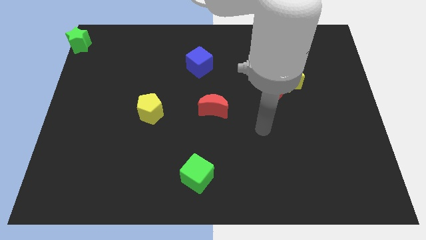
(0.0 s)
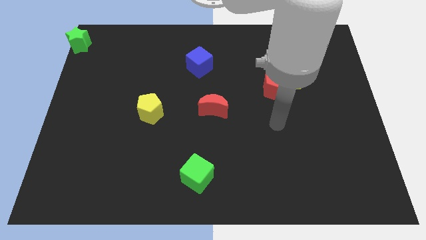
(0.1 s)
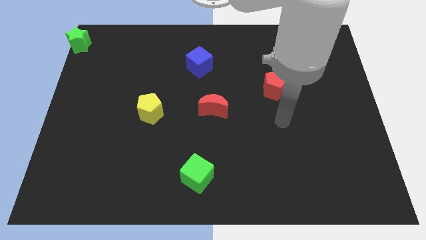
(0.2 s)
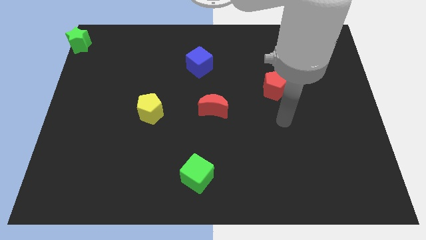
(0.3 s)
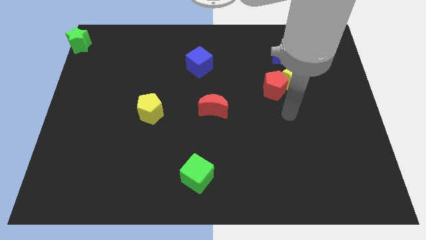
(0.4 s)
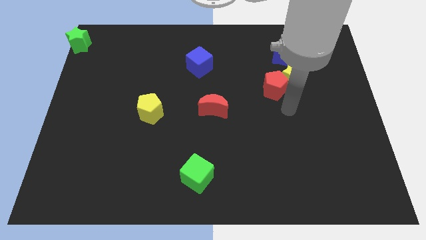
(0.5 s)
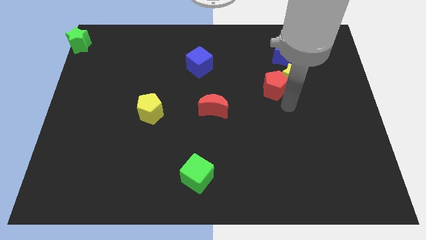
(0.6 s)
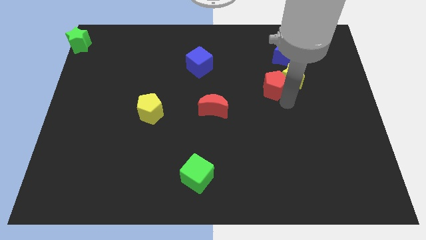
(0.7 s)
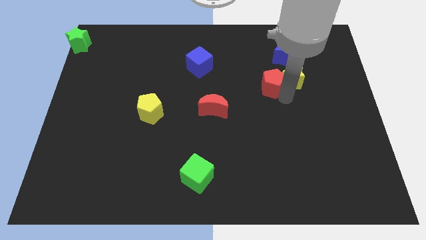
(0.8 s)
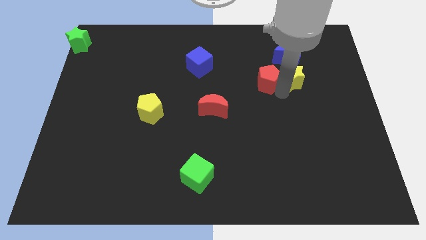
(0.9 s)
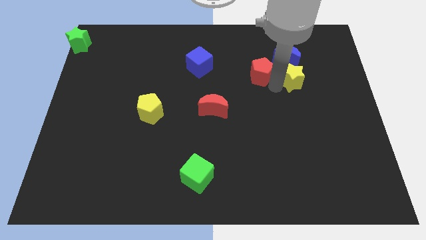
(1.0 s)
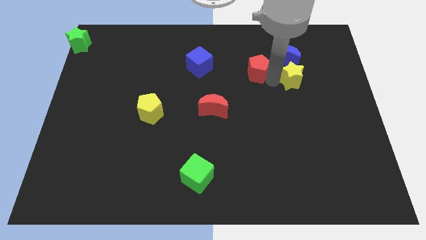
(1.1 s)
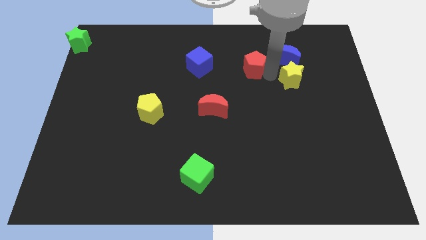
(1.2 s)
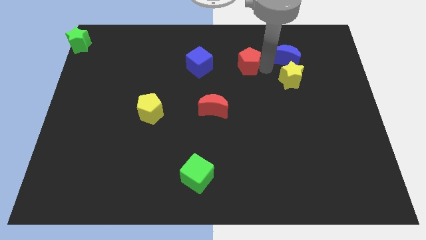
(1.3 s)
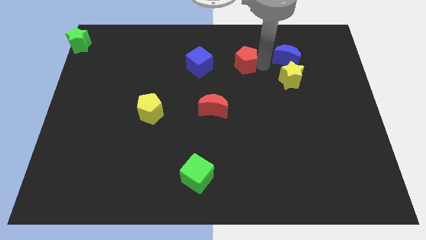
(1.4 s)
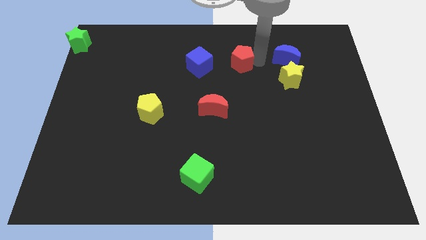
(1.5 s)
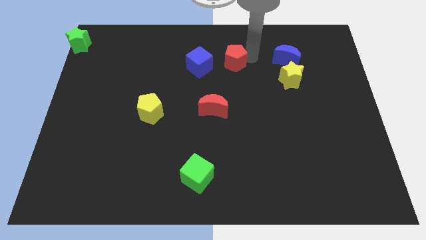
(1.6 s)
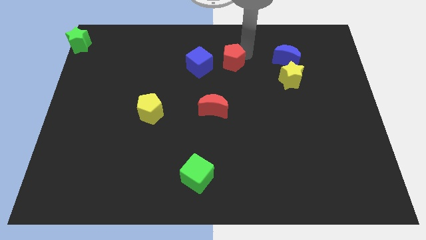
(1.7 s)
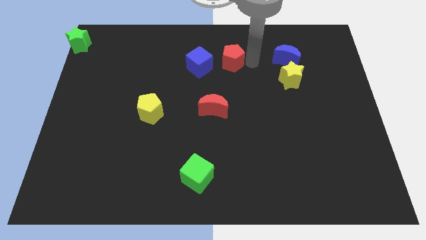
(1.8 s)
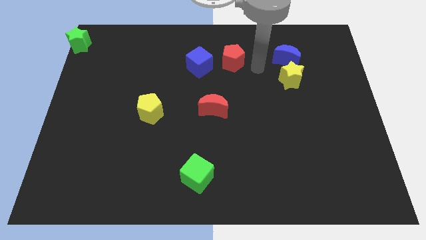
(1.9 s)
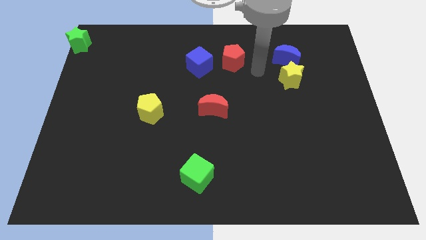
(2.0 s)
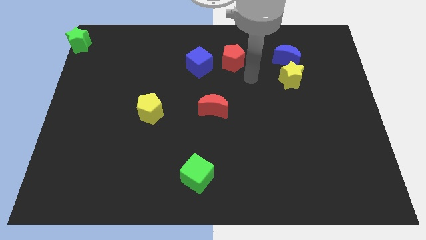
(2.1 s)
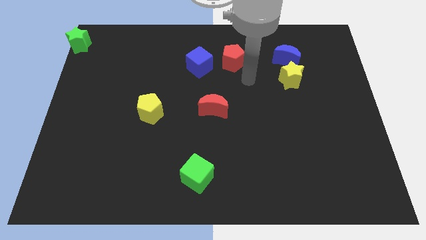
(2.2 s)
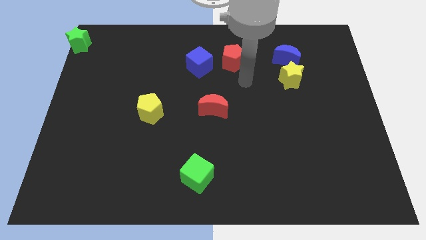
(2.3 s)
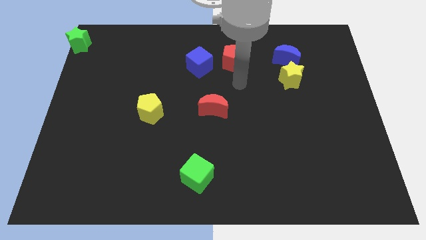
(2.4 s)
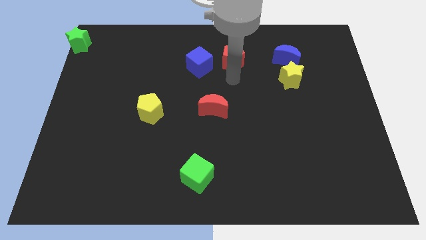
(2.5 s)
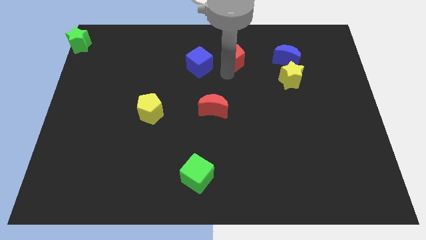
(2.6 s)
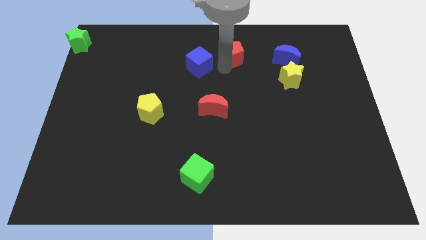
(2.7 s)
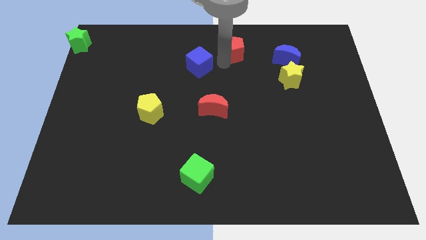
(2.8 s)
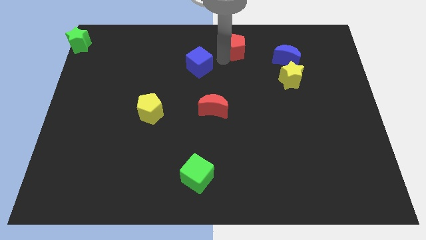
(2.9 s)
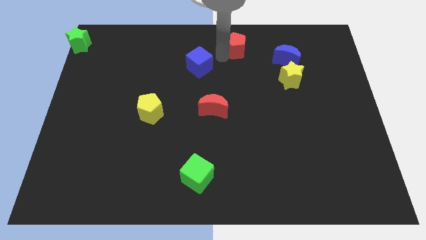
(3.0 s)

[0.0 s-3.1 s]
push the red pentagon upwards at the top center

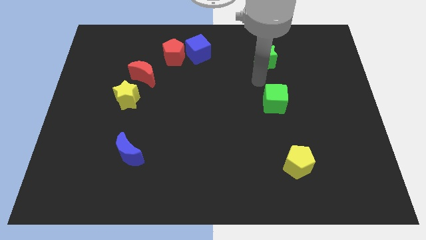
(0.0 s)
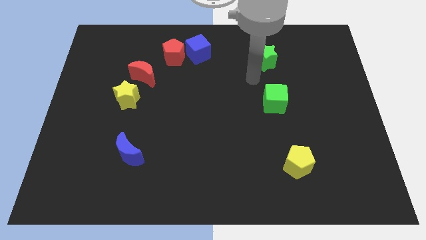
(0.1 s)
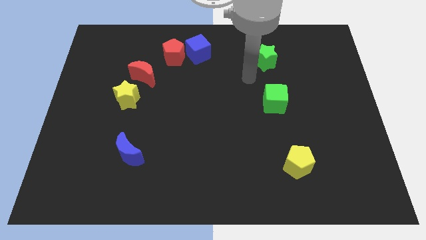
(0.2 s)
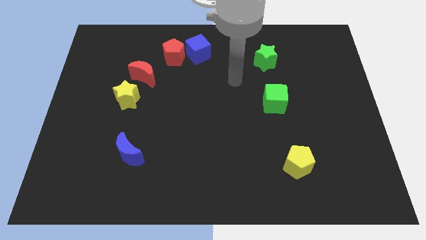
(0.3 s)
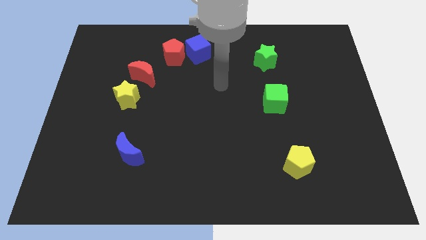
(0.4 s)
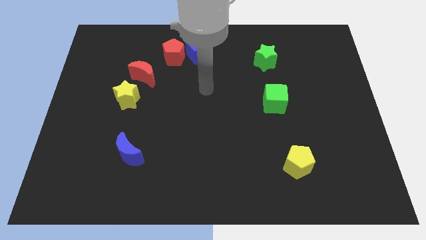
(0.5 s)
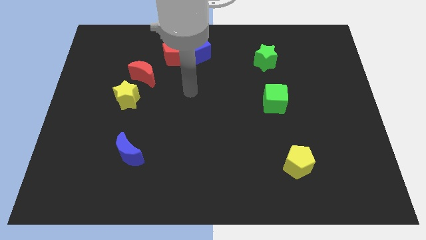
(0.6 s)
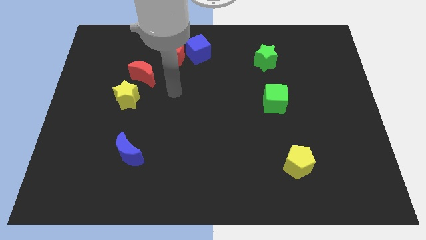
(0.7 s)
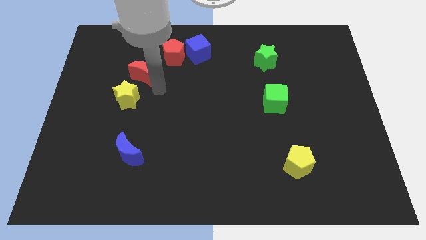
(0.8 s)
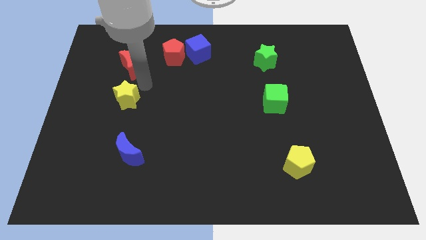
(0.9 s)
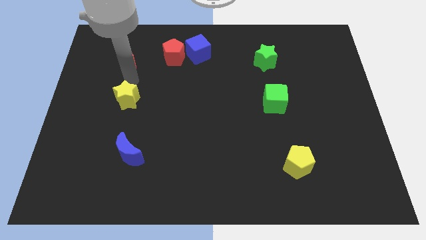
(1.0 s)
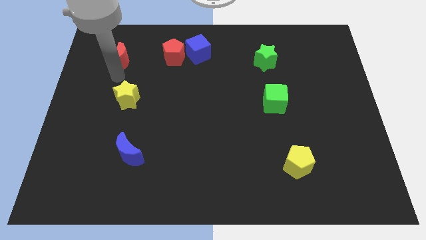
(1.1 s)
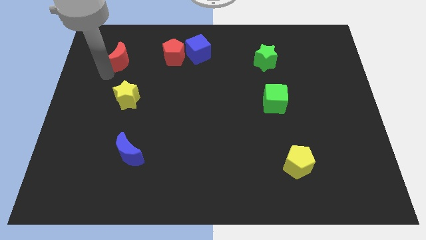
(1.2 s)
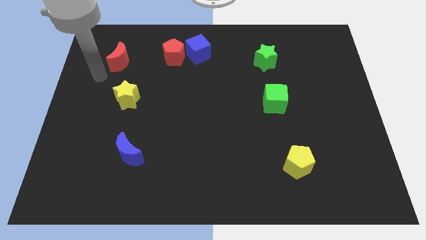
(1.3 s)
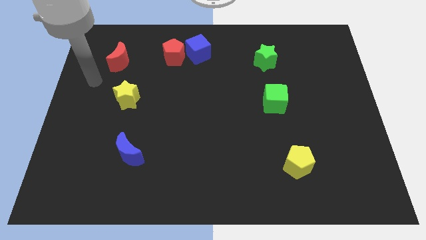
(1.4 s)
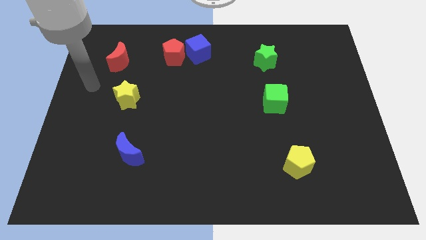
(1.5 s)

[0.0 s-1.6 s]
push the red moon at the left side of the red pentagon

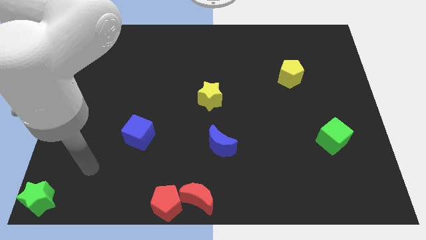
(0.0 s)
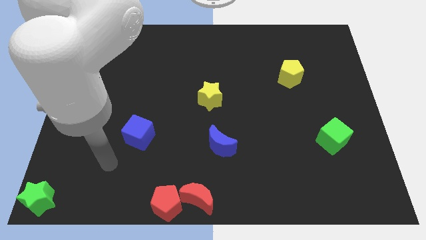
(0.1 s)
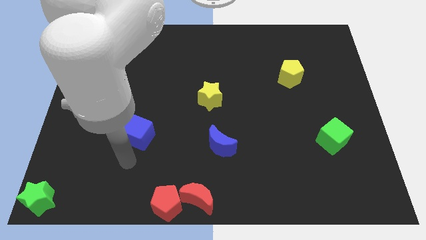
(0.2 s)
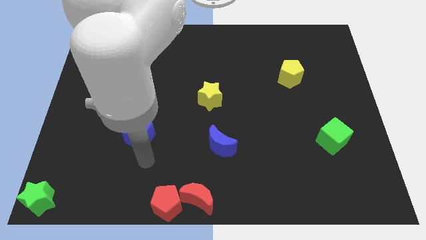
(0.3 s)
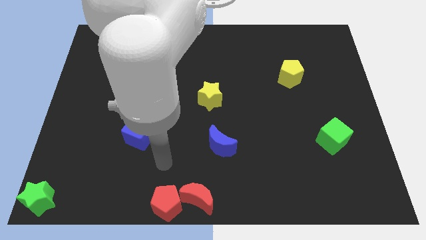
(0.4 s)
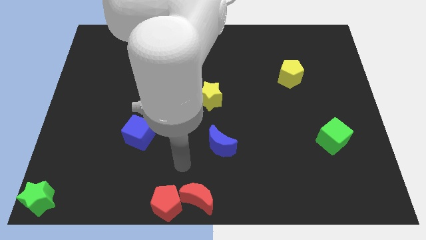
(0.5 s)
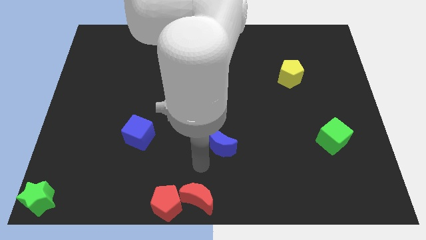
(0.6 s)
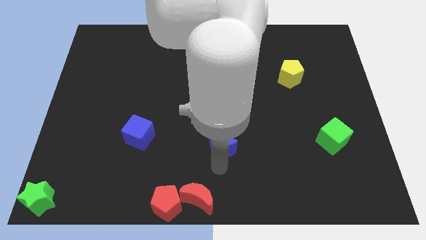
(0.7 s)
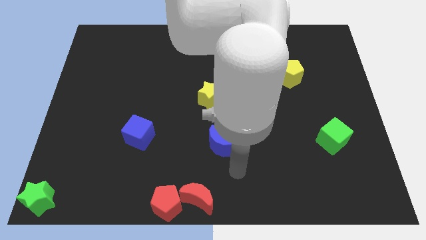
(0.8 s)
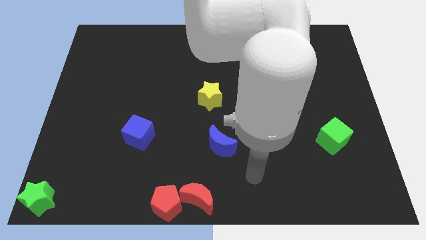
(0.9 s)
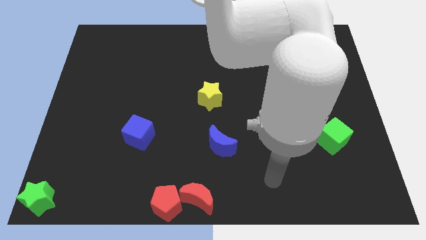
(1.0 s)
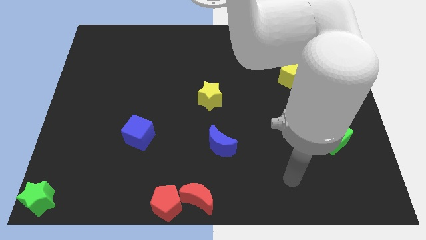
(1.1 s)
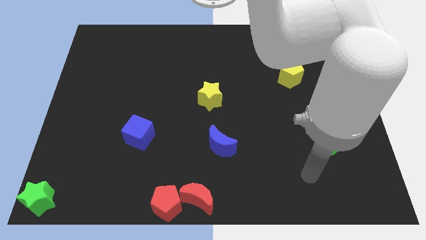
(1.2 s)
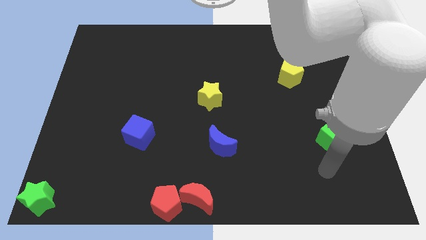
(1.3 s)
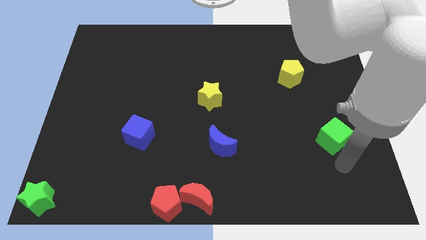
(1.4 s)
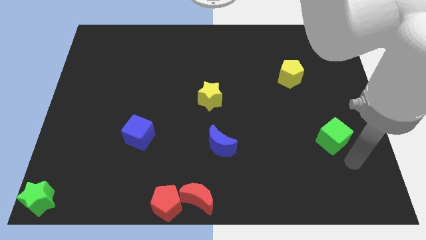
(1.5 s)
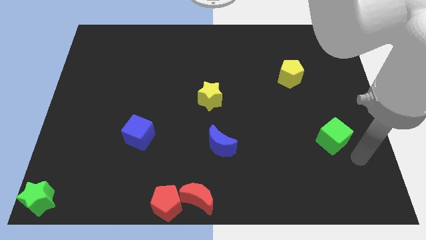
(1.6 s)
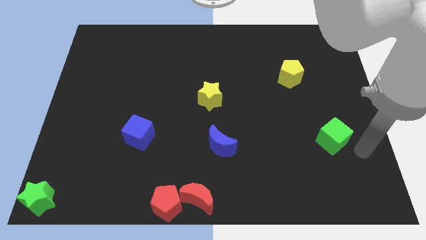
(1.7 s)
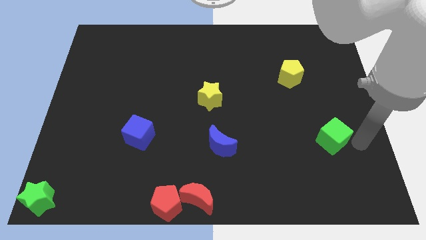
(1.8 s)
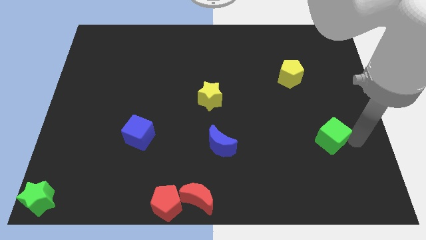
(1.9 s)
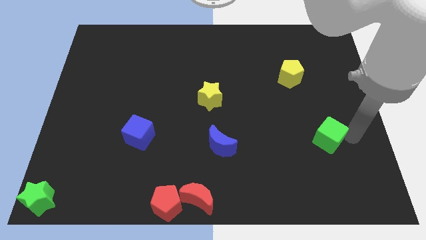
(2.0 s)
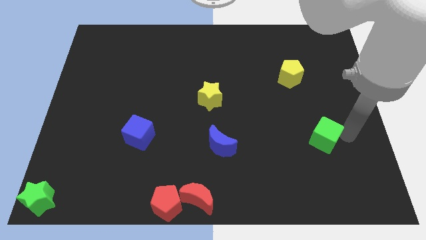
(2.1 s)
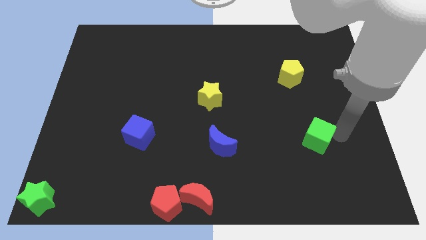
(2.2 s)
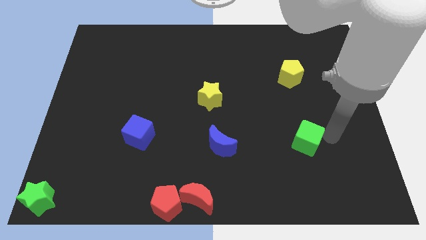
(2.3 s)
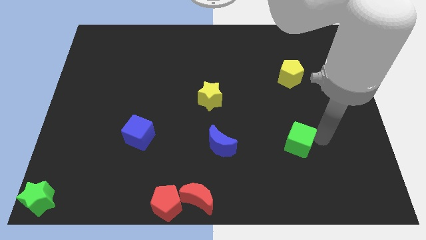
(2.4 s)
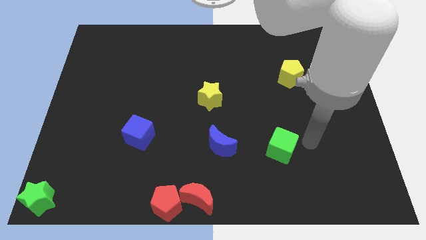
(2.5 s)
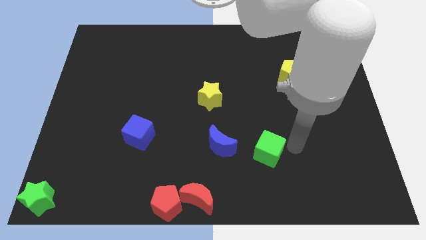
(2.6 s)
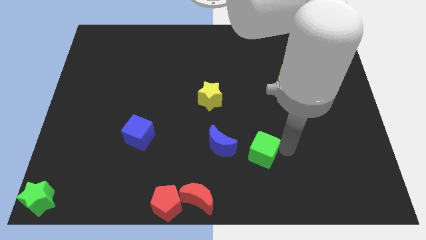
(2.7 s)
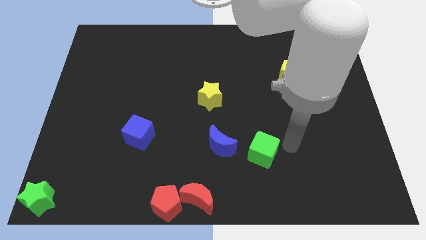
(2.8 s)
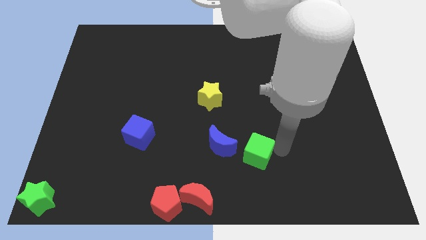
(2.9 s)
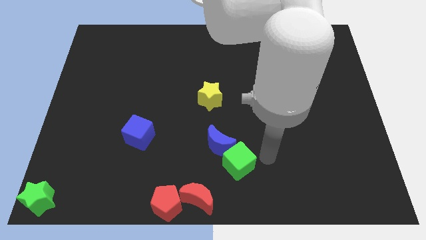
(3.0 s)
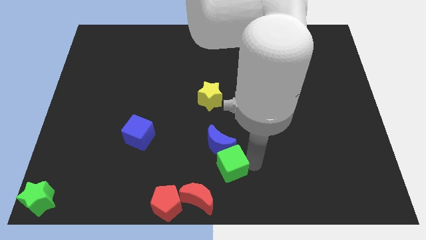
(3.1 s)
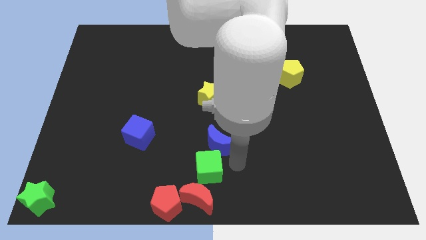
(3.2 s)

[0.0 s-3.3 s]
slide the green cube above to the red crescent

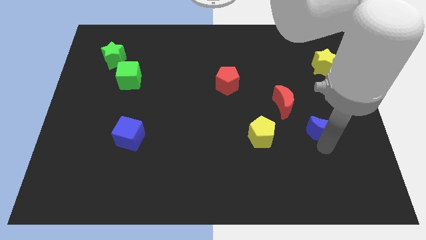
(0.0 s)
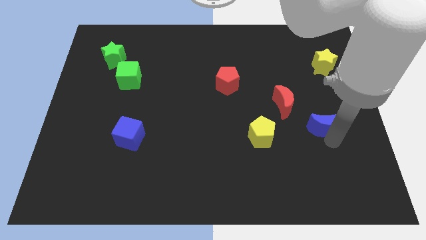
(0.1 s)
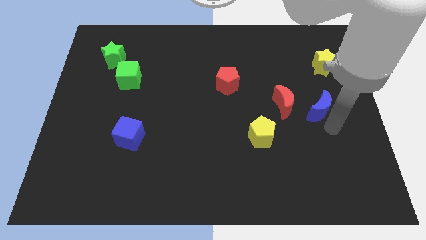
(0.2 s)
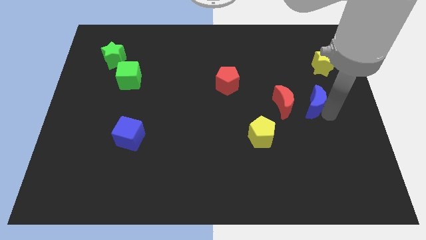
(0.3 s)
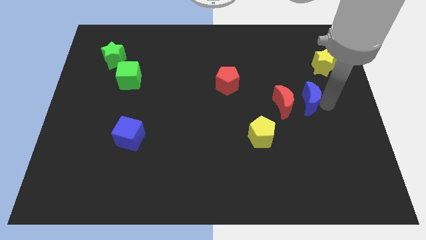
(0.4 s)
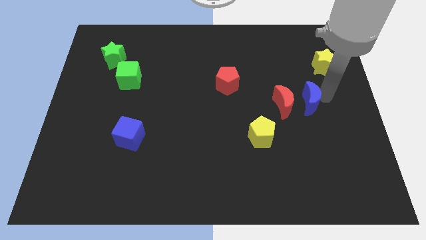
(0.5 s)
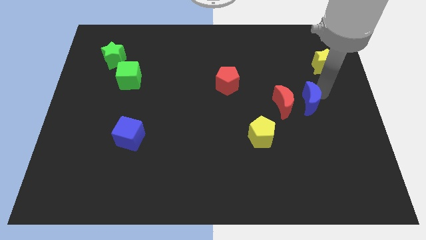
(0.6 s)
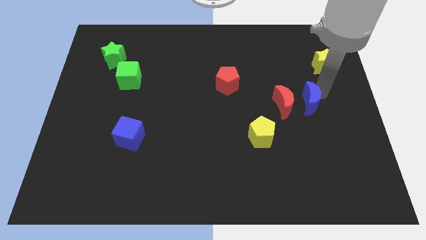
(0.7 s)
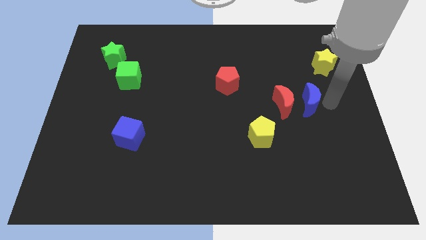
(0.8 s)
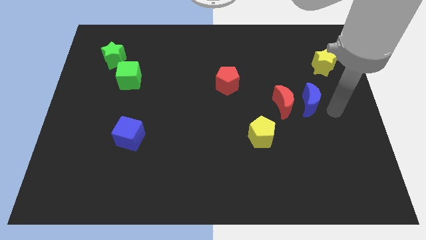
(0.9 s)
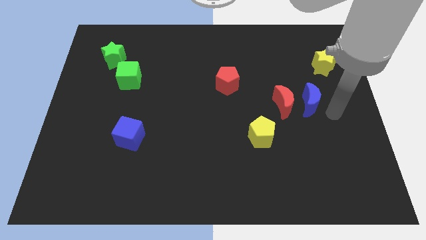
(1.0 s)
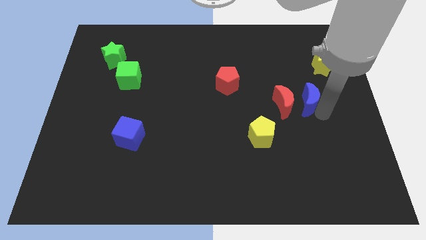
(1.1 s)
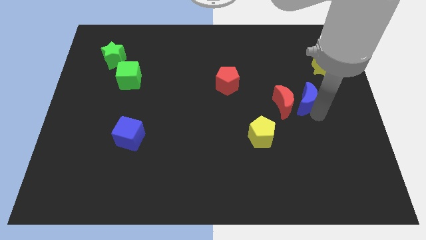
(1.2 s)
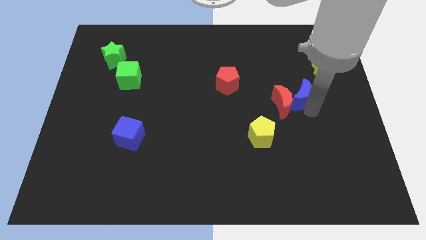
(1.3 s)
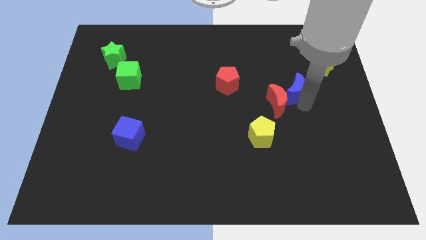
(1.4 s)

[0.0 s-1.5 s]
make the blue crescent to touch the right side of the red crescent
